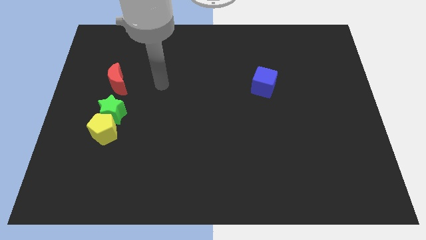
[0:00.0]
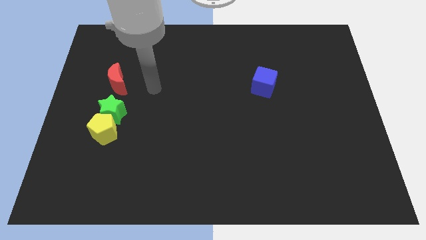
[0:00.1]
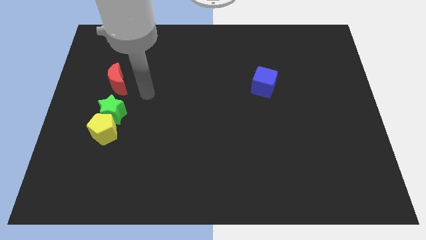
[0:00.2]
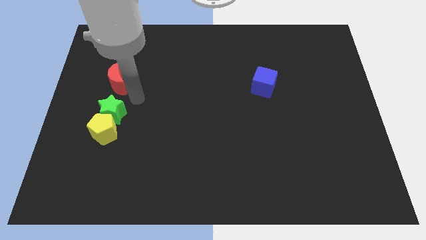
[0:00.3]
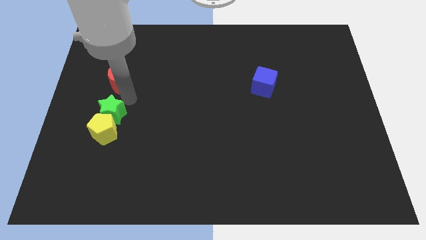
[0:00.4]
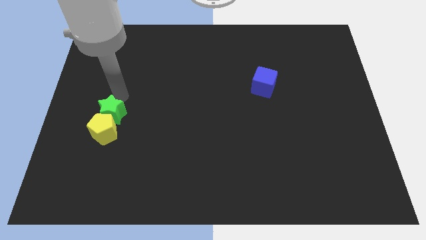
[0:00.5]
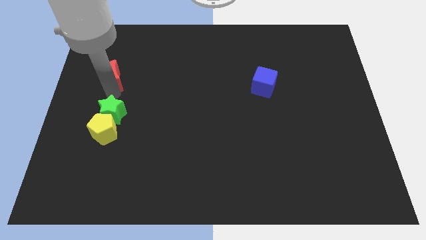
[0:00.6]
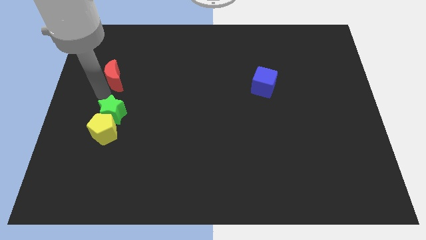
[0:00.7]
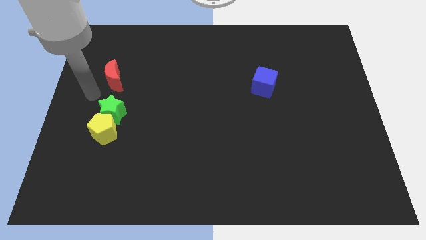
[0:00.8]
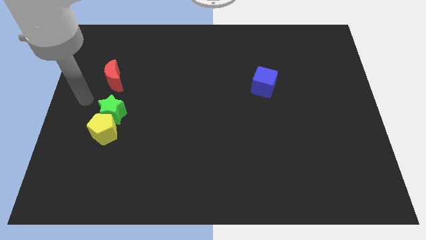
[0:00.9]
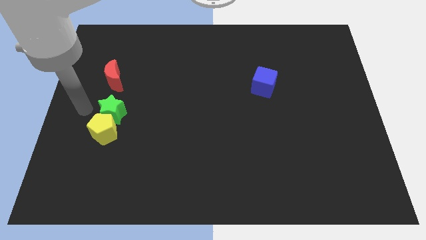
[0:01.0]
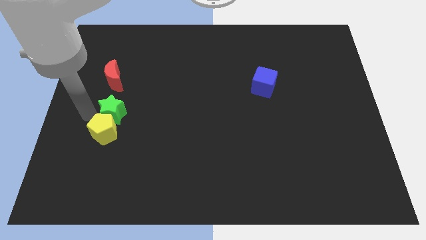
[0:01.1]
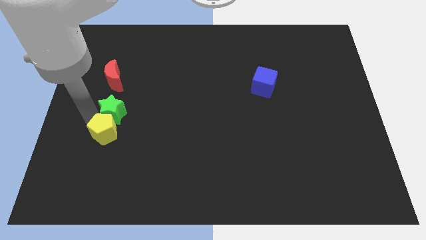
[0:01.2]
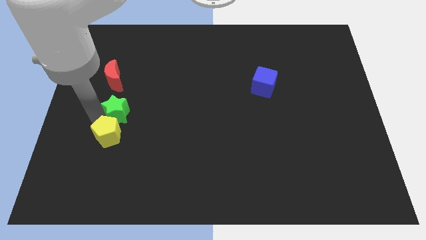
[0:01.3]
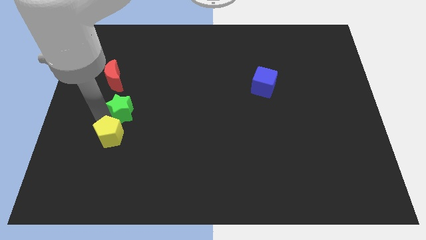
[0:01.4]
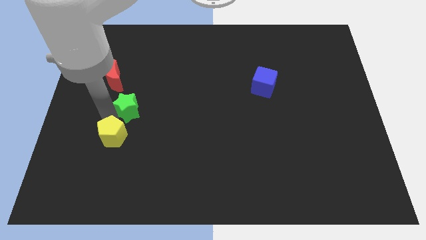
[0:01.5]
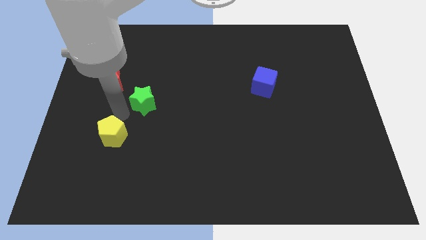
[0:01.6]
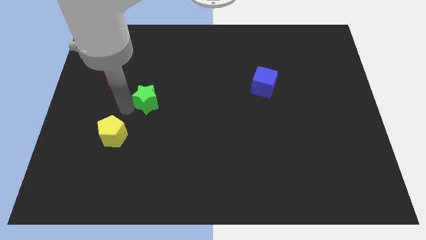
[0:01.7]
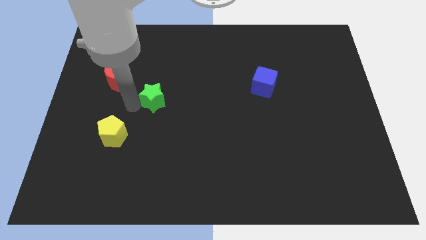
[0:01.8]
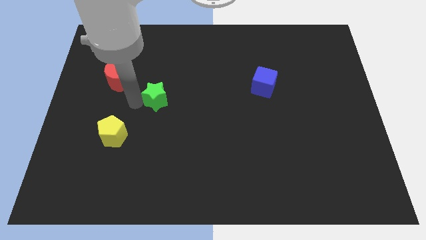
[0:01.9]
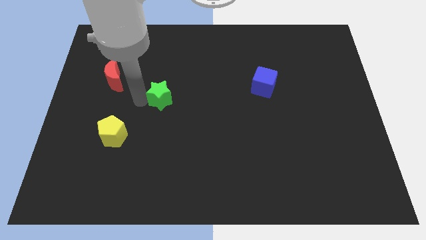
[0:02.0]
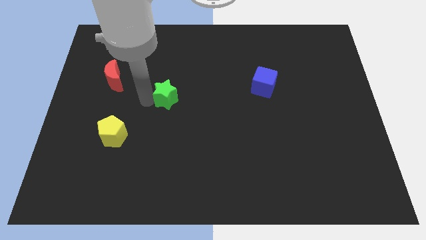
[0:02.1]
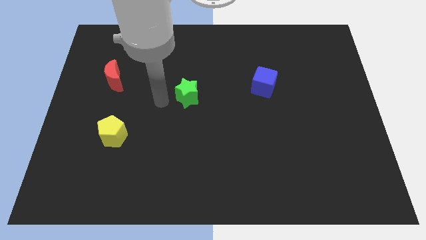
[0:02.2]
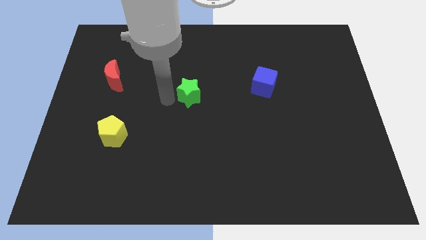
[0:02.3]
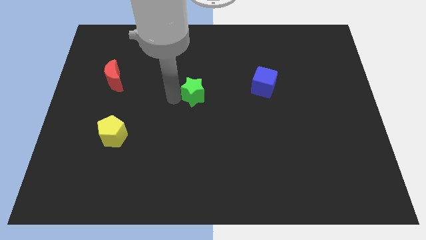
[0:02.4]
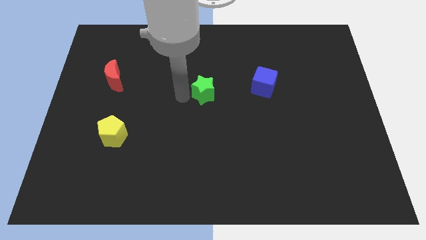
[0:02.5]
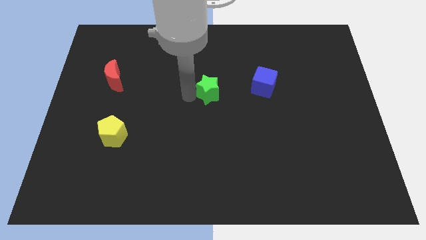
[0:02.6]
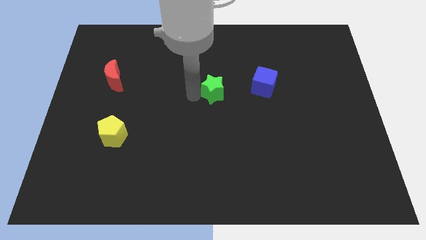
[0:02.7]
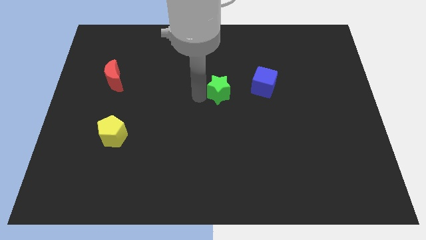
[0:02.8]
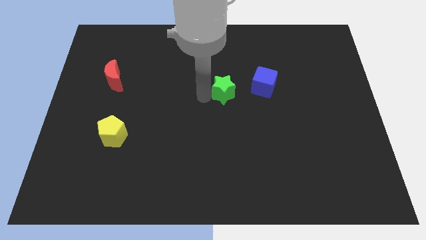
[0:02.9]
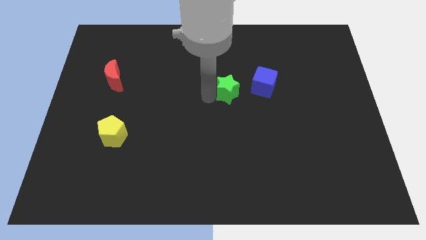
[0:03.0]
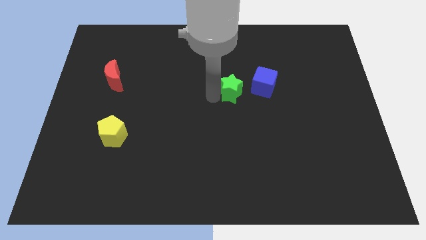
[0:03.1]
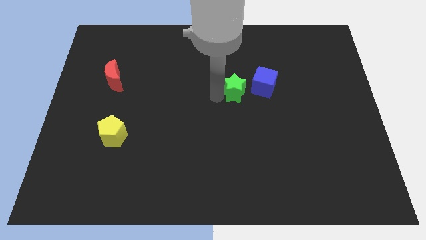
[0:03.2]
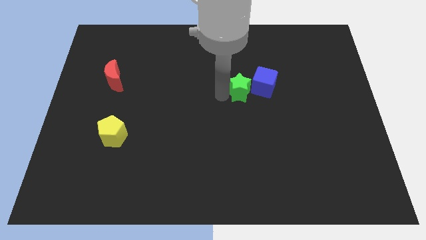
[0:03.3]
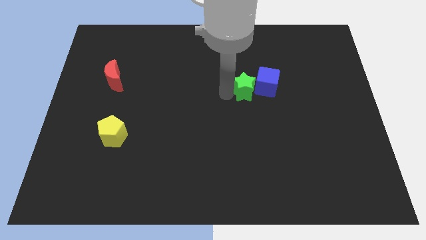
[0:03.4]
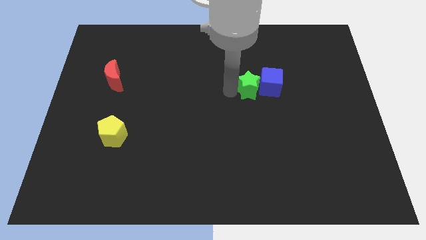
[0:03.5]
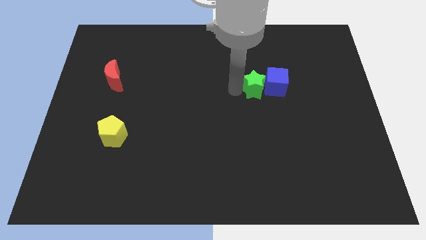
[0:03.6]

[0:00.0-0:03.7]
push the star next to the blue cube

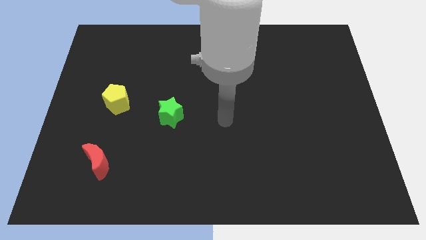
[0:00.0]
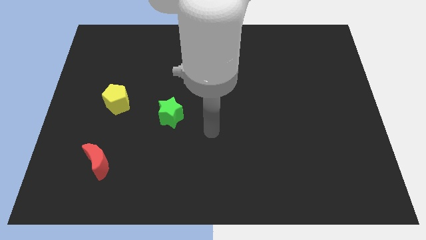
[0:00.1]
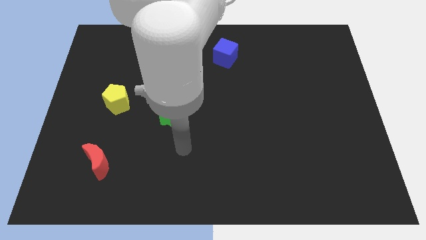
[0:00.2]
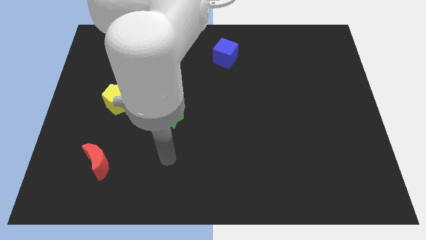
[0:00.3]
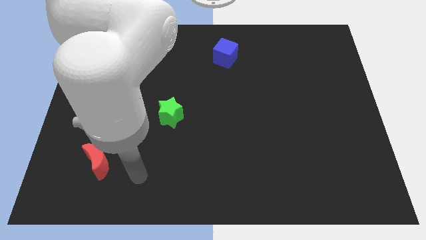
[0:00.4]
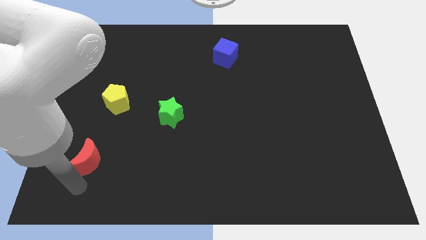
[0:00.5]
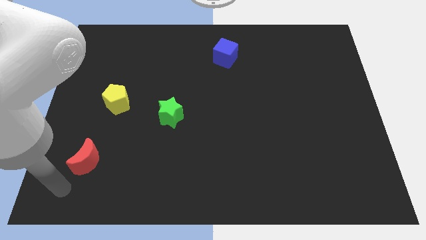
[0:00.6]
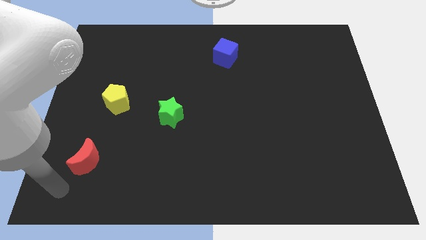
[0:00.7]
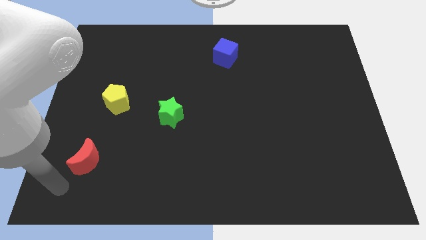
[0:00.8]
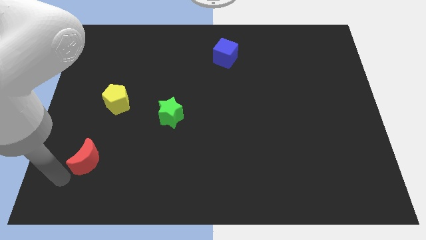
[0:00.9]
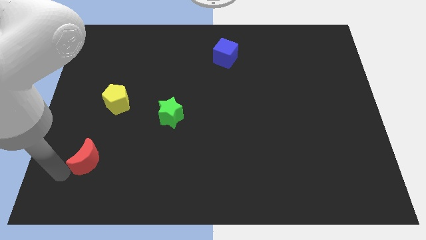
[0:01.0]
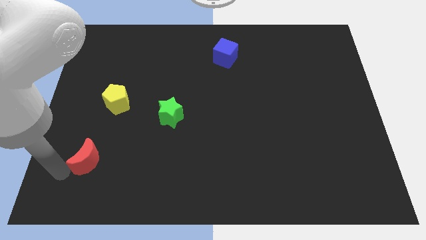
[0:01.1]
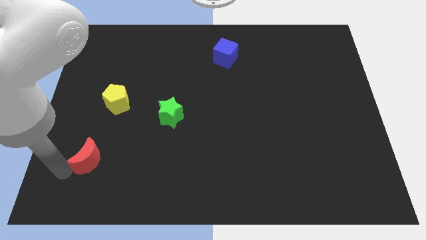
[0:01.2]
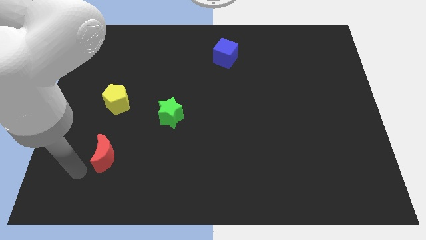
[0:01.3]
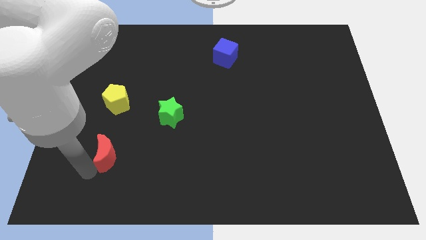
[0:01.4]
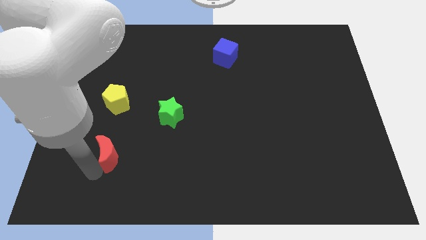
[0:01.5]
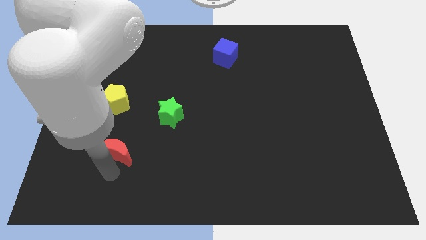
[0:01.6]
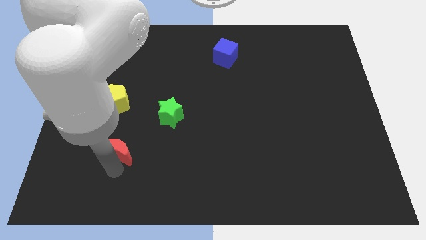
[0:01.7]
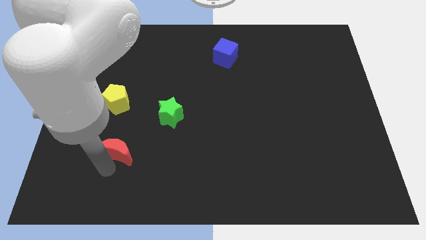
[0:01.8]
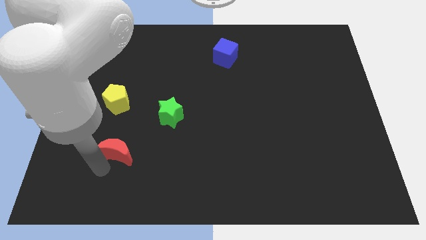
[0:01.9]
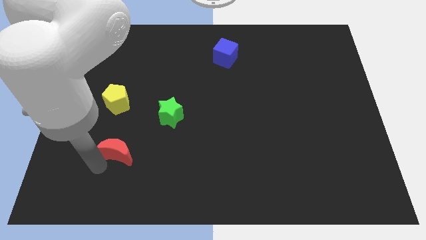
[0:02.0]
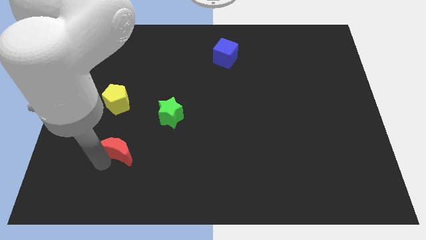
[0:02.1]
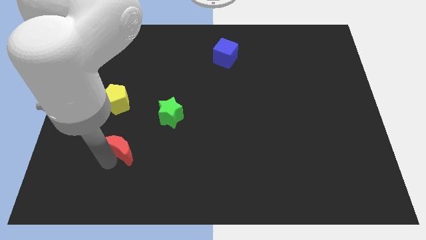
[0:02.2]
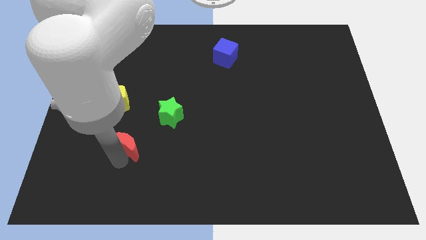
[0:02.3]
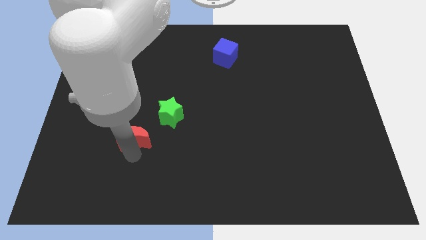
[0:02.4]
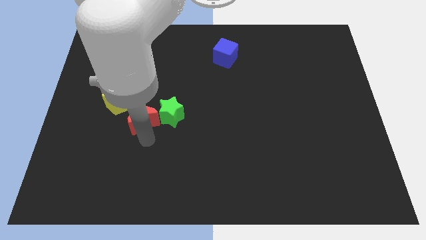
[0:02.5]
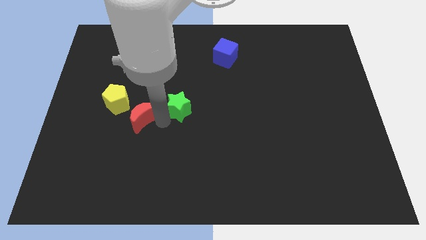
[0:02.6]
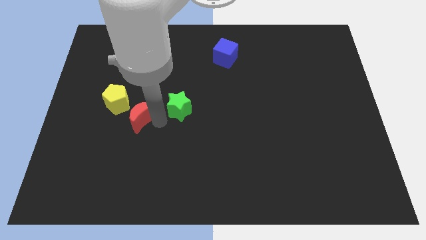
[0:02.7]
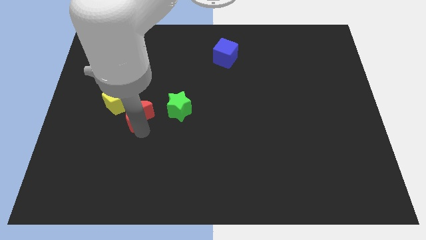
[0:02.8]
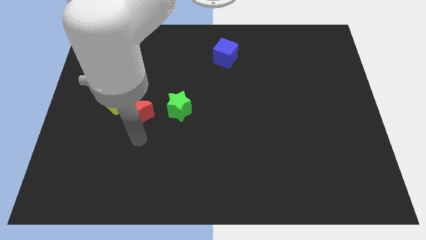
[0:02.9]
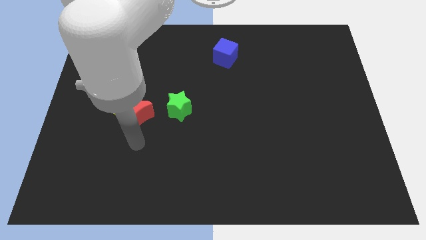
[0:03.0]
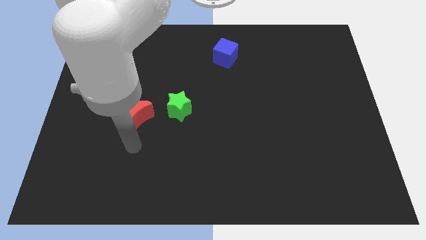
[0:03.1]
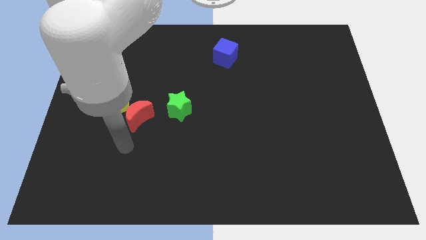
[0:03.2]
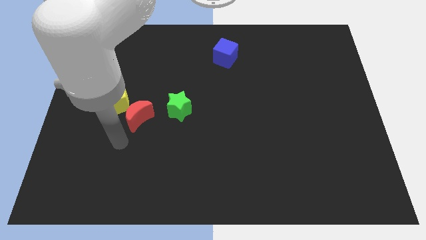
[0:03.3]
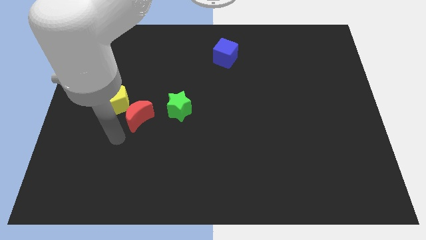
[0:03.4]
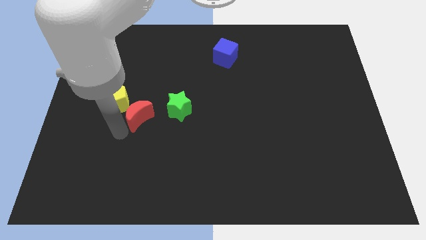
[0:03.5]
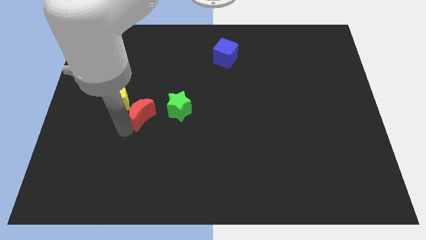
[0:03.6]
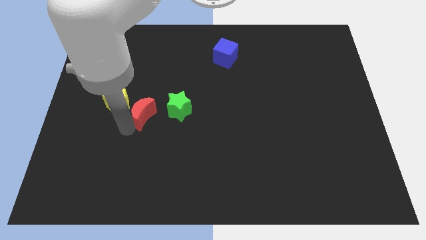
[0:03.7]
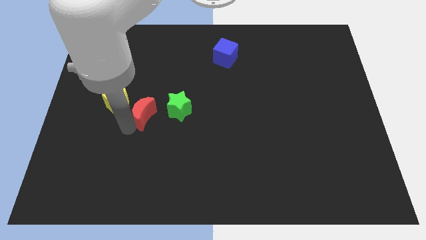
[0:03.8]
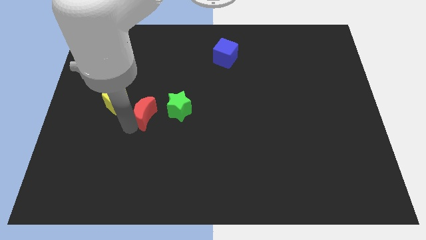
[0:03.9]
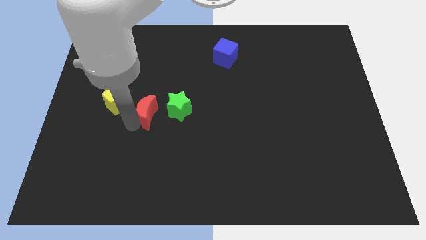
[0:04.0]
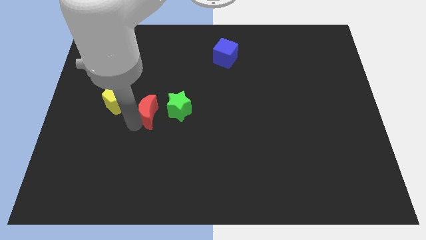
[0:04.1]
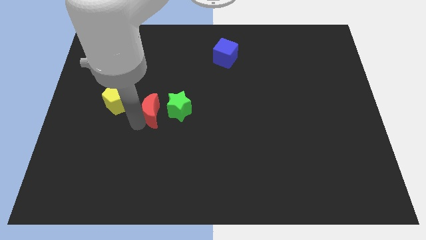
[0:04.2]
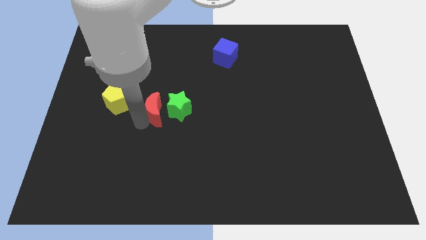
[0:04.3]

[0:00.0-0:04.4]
push the red block next to the star

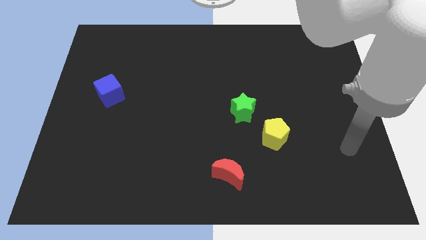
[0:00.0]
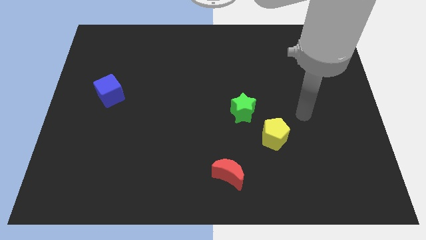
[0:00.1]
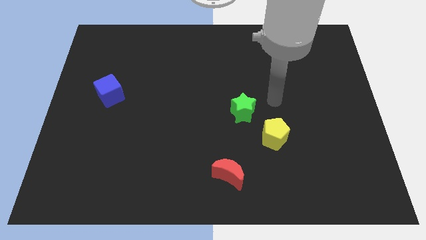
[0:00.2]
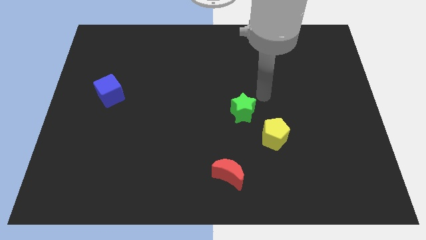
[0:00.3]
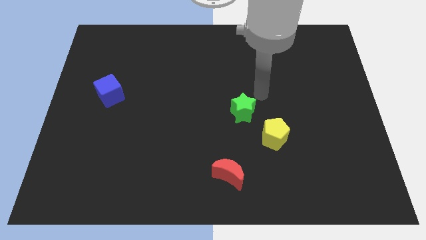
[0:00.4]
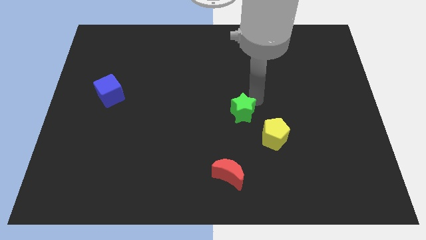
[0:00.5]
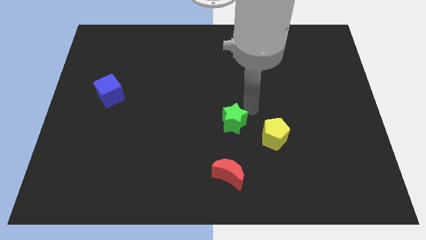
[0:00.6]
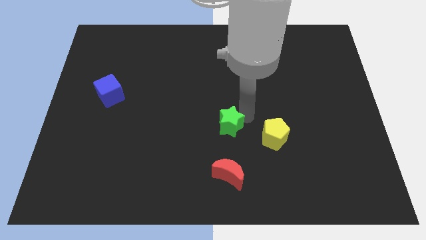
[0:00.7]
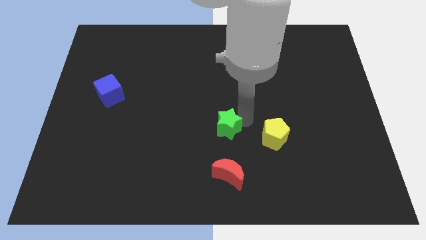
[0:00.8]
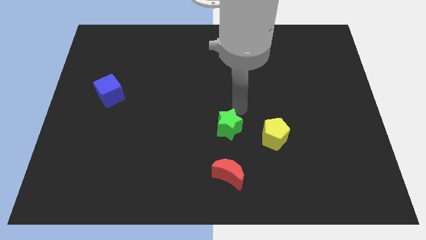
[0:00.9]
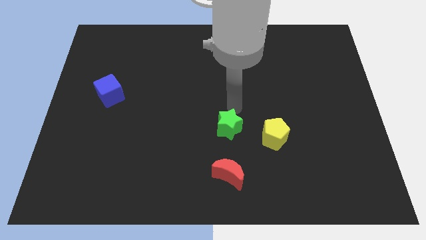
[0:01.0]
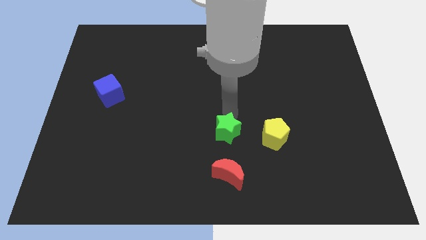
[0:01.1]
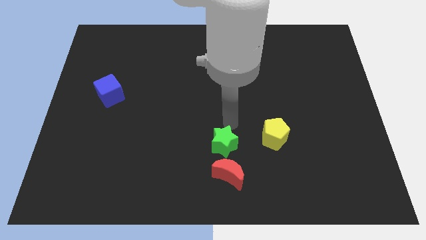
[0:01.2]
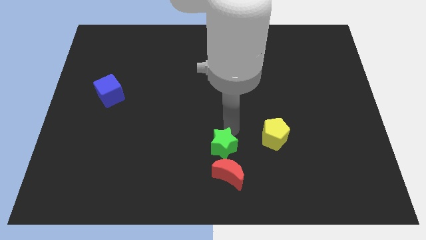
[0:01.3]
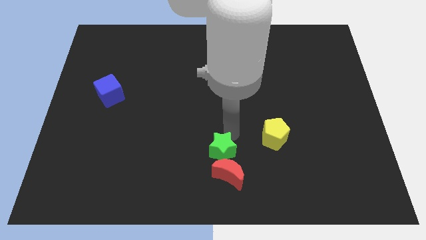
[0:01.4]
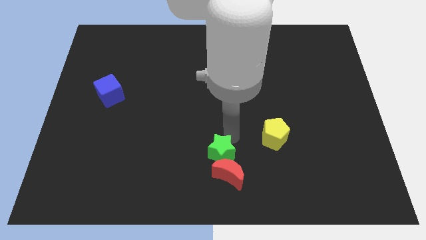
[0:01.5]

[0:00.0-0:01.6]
push the green block close to the red moon
